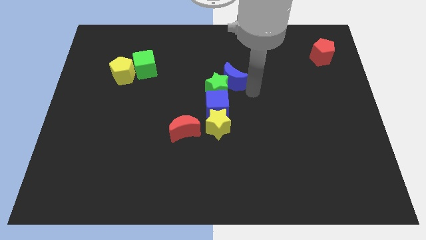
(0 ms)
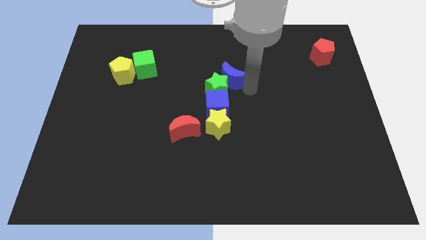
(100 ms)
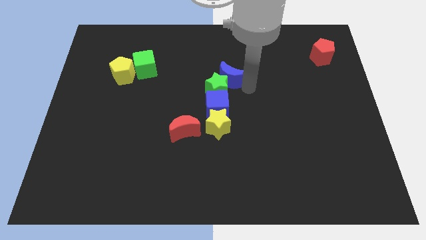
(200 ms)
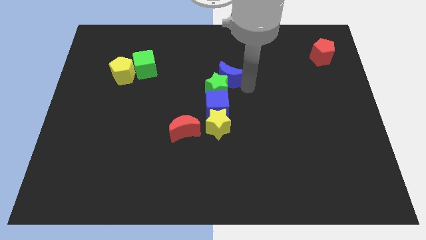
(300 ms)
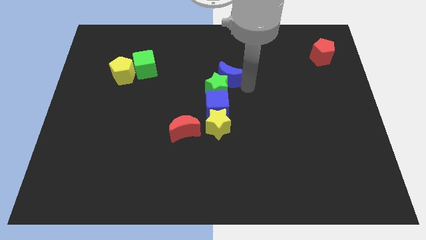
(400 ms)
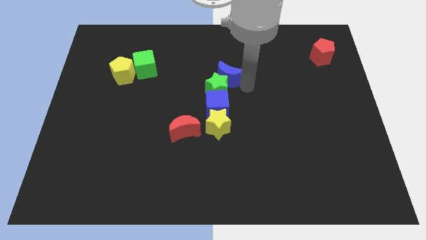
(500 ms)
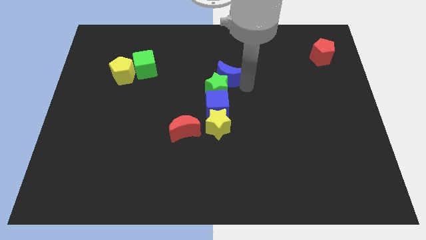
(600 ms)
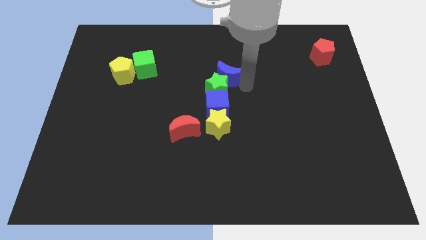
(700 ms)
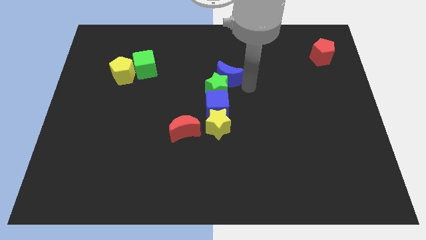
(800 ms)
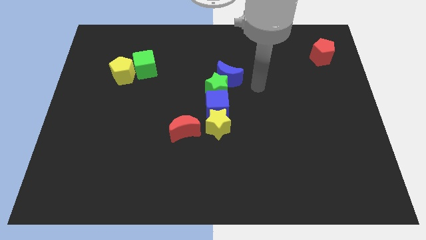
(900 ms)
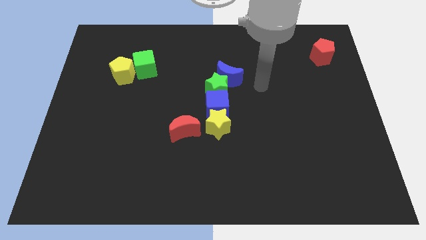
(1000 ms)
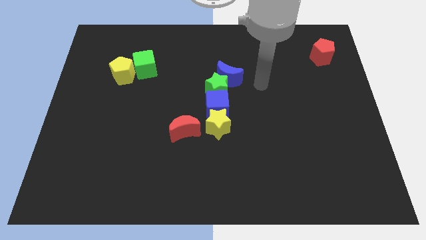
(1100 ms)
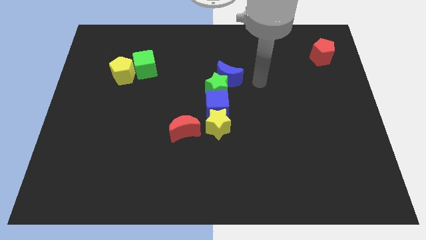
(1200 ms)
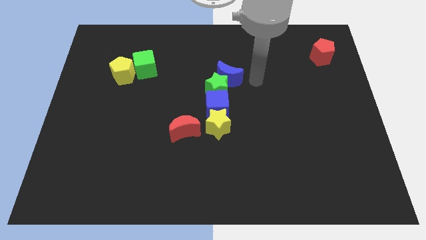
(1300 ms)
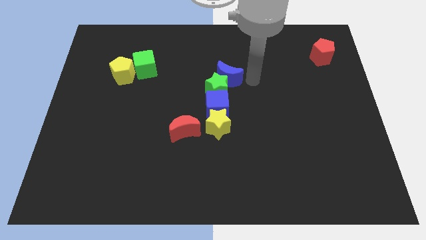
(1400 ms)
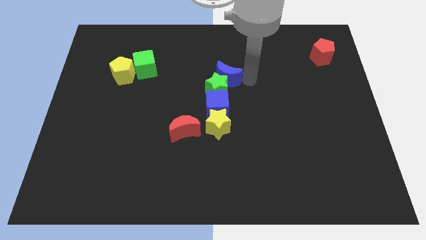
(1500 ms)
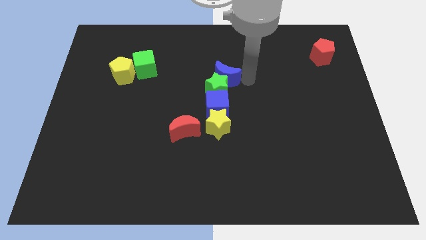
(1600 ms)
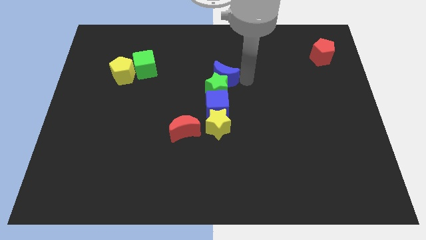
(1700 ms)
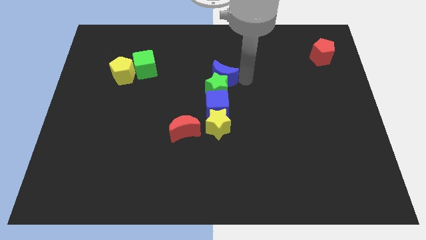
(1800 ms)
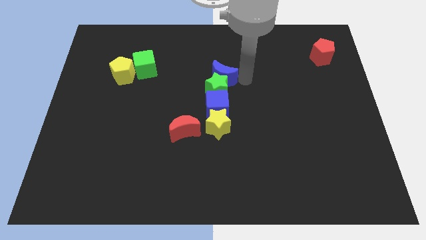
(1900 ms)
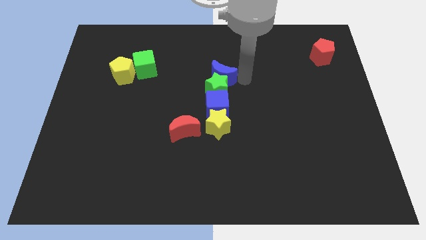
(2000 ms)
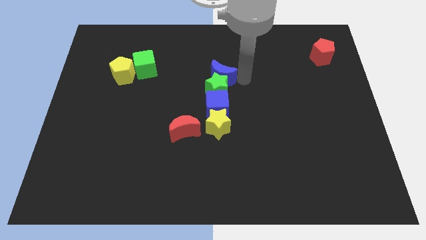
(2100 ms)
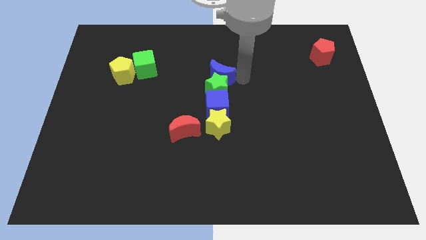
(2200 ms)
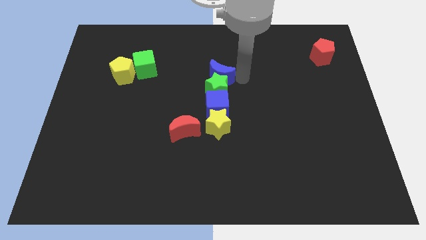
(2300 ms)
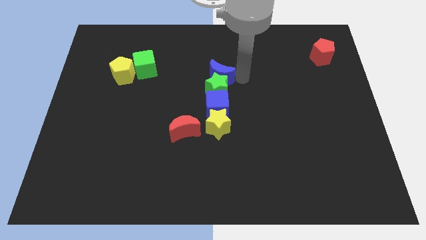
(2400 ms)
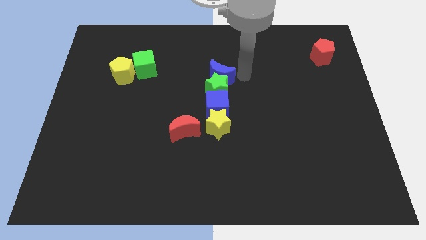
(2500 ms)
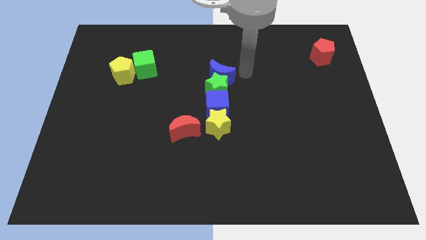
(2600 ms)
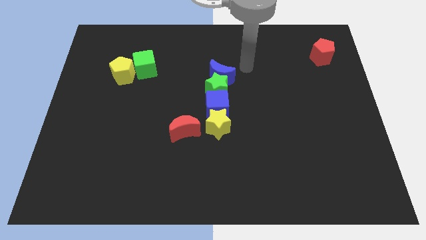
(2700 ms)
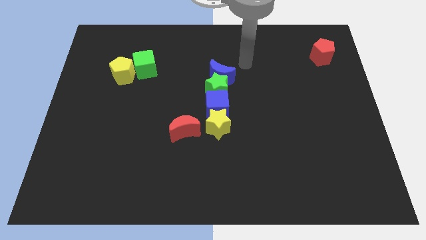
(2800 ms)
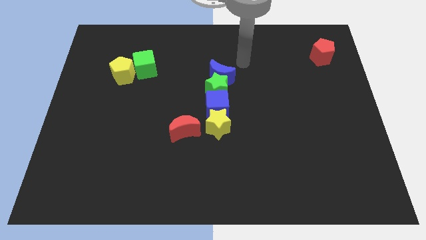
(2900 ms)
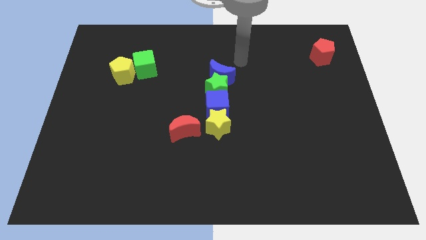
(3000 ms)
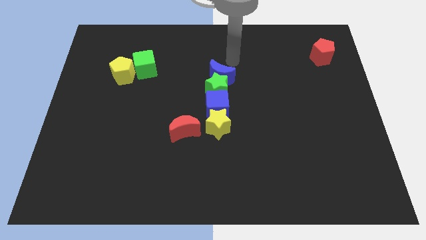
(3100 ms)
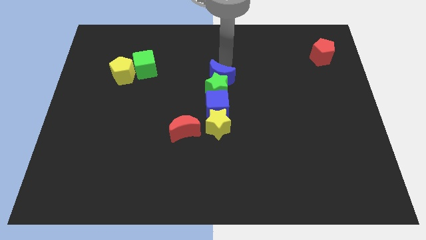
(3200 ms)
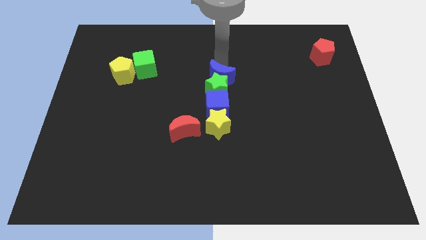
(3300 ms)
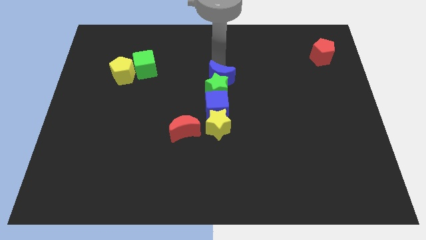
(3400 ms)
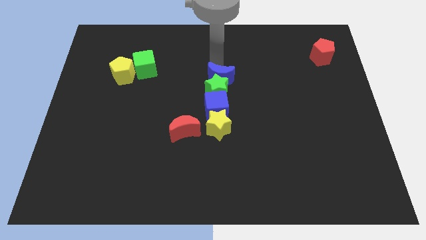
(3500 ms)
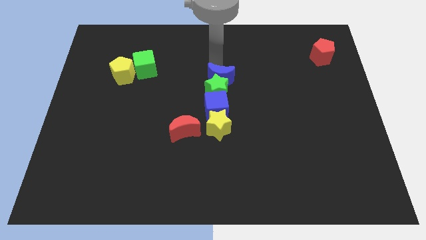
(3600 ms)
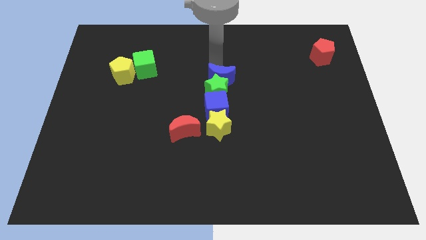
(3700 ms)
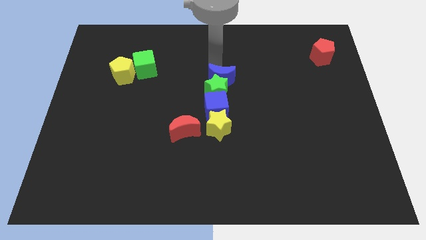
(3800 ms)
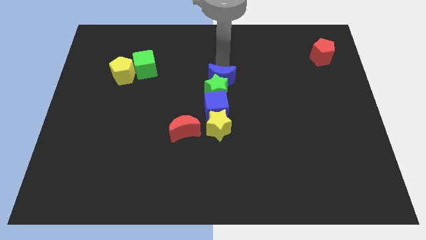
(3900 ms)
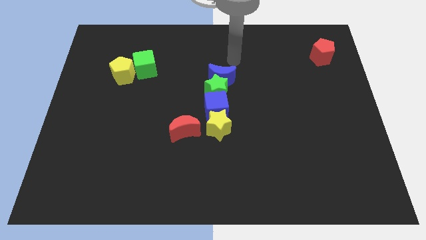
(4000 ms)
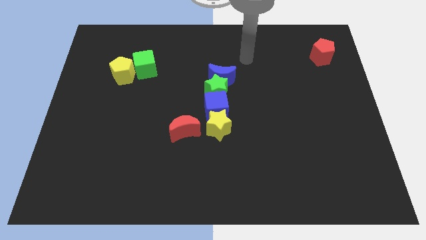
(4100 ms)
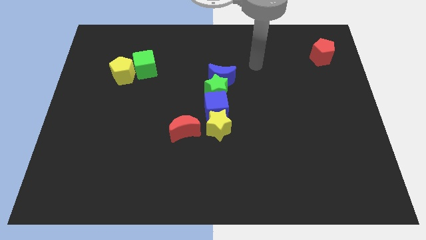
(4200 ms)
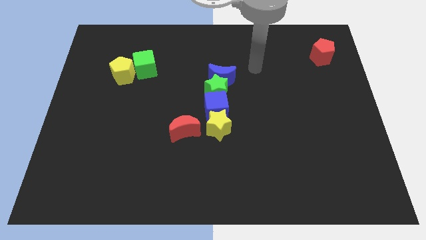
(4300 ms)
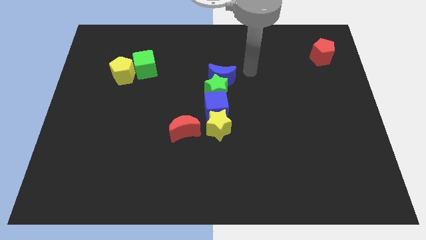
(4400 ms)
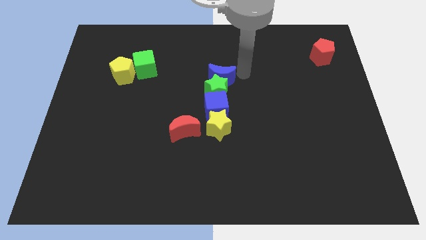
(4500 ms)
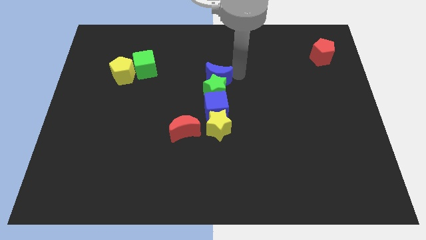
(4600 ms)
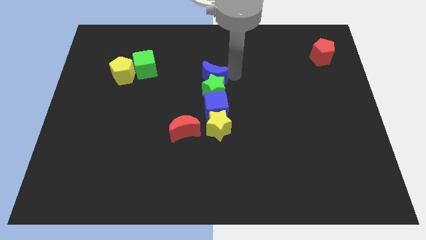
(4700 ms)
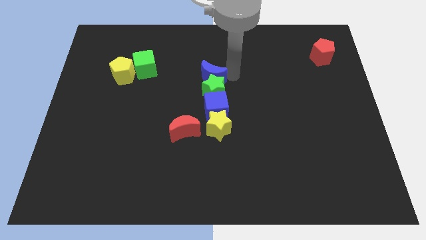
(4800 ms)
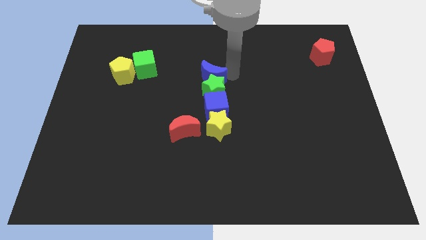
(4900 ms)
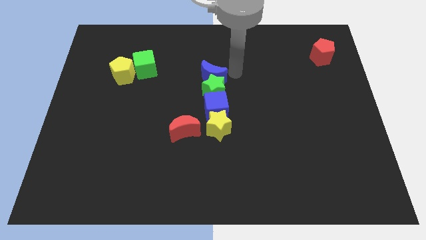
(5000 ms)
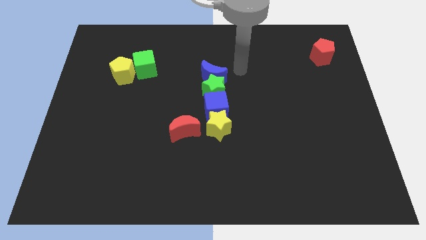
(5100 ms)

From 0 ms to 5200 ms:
push the blue crescent on top of the green star

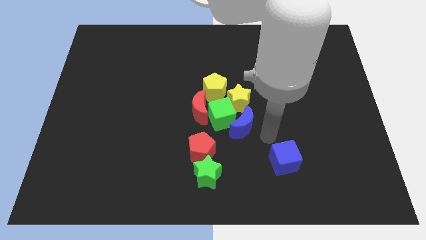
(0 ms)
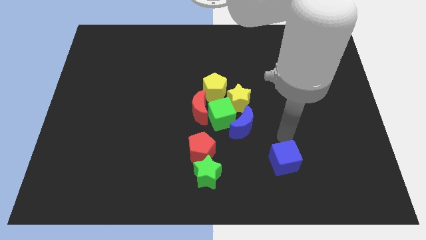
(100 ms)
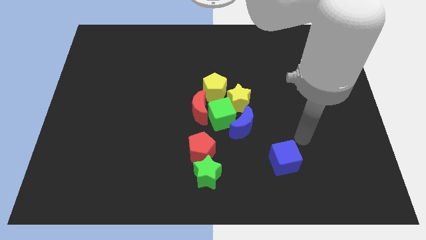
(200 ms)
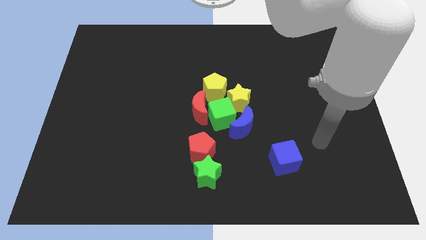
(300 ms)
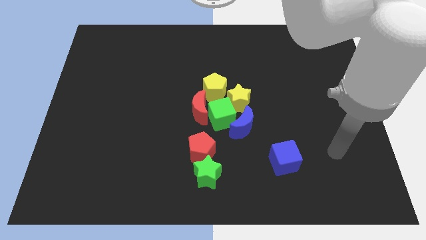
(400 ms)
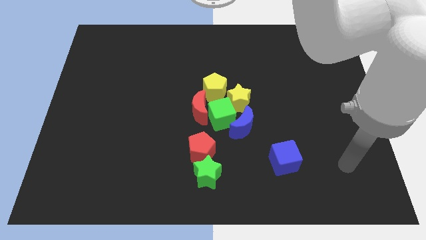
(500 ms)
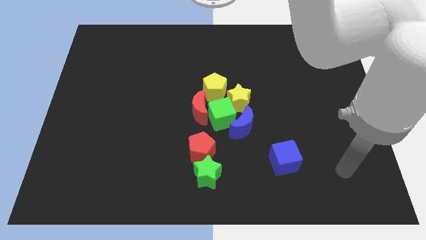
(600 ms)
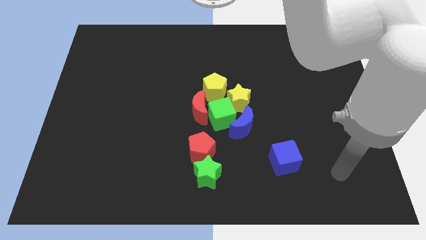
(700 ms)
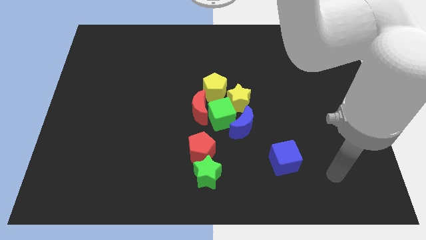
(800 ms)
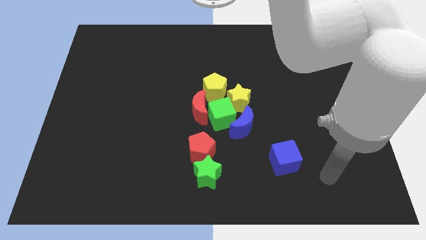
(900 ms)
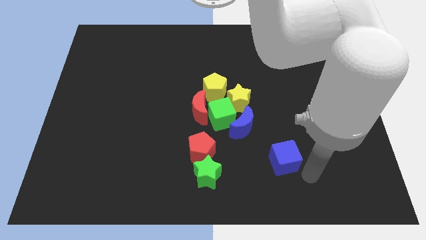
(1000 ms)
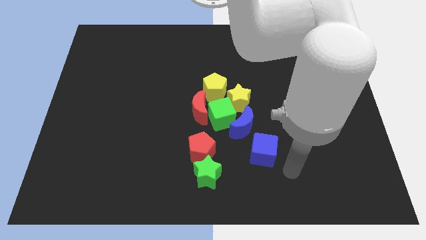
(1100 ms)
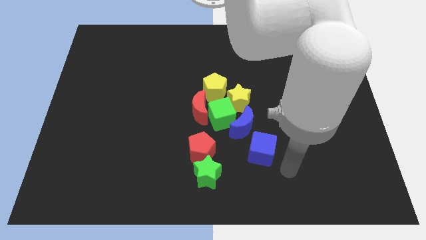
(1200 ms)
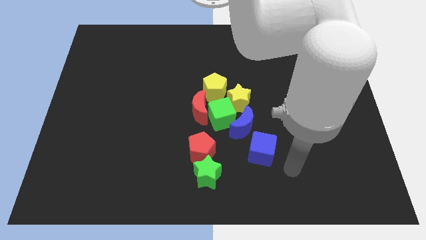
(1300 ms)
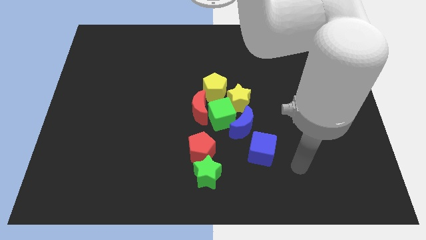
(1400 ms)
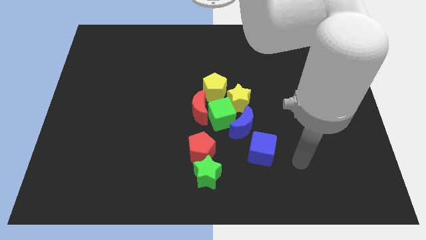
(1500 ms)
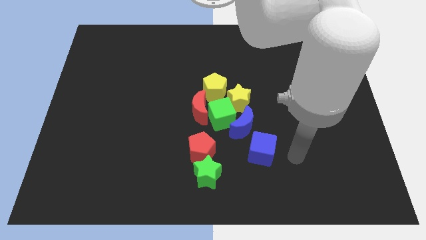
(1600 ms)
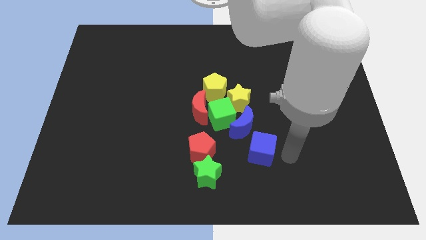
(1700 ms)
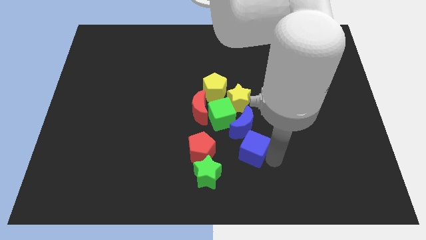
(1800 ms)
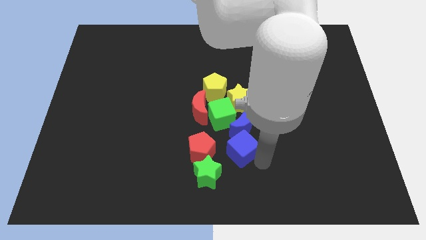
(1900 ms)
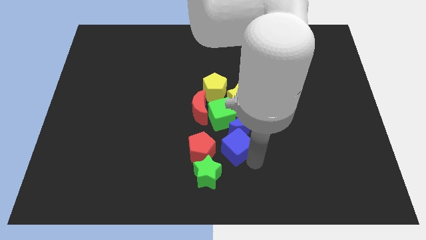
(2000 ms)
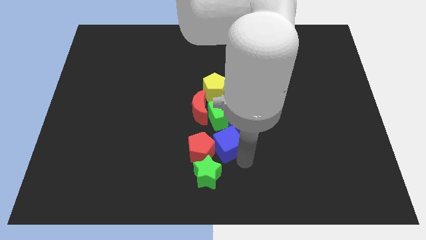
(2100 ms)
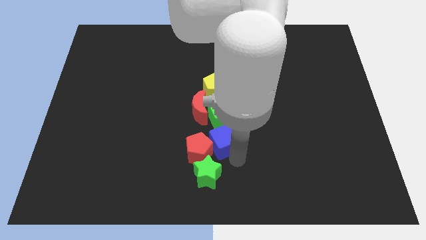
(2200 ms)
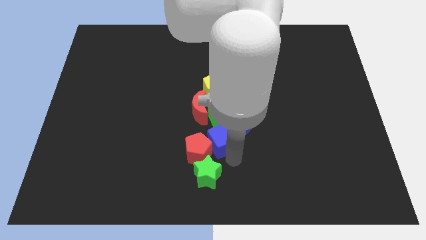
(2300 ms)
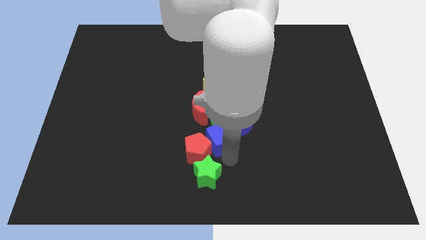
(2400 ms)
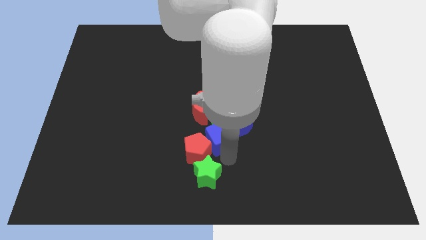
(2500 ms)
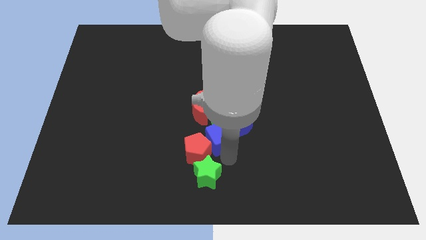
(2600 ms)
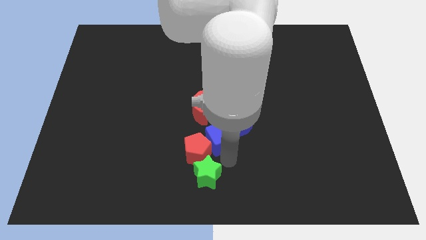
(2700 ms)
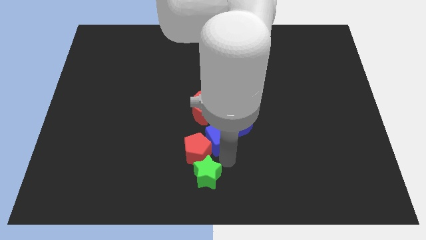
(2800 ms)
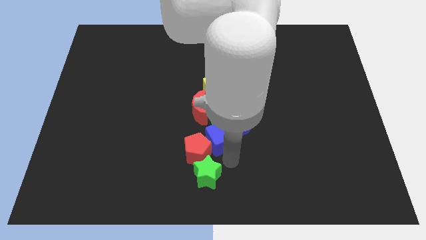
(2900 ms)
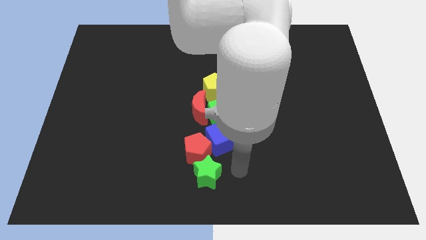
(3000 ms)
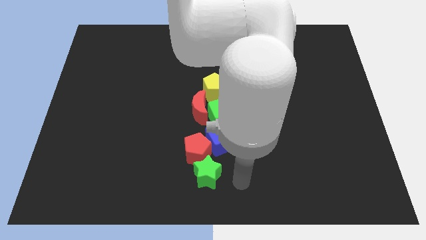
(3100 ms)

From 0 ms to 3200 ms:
place the blue cube to the right of the red pentagon

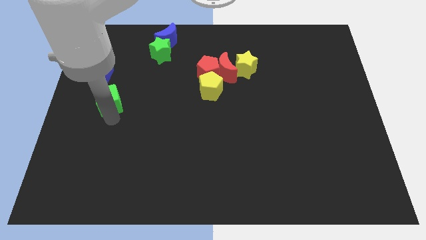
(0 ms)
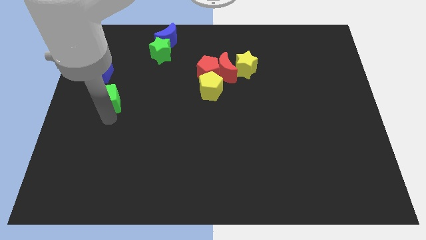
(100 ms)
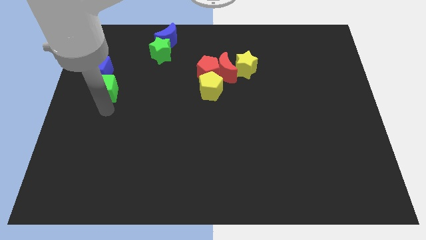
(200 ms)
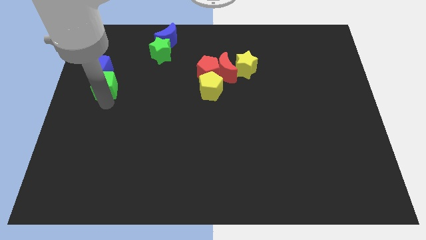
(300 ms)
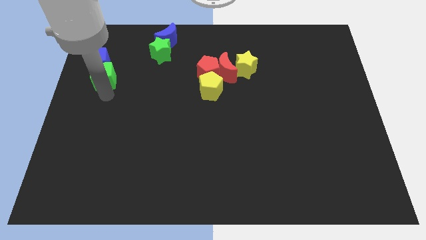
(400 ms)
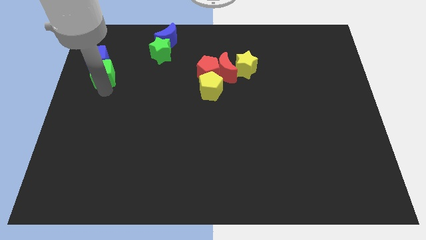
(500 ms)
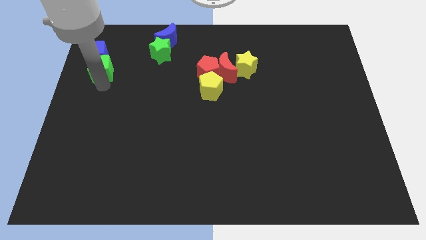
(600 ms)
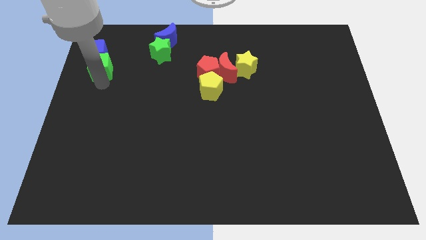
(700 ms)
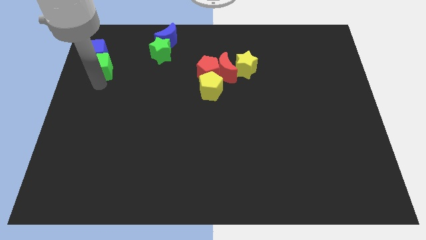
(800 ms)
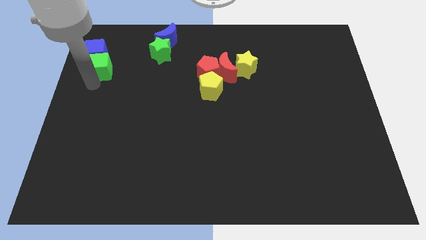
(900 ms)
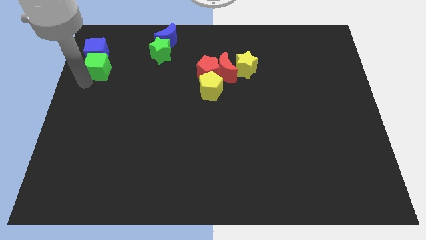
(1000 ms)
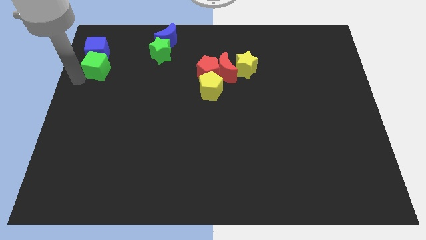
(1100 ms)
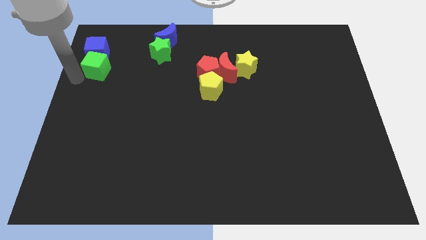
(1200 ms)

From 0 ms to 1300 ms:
push the green cube below the blue cube
